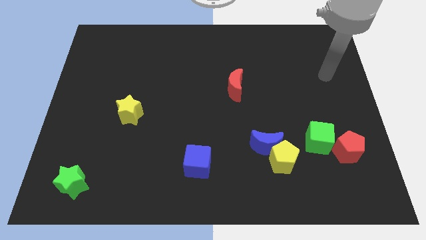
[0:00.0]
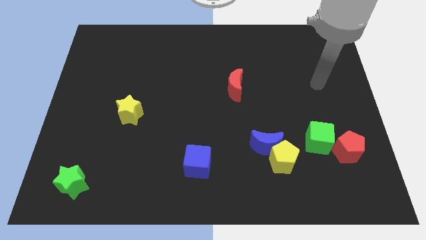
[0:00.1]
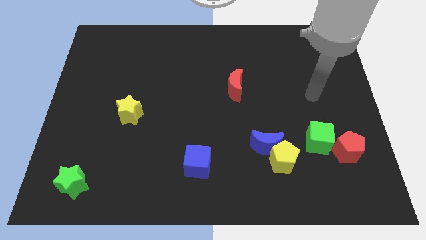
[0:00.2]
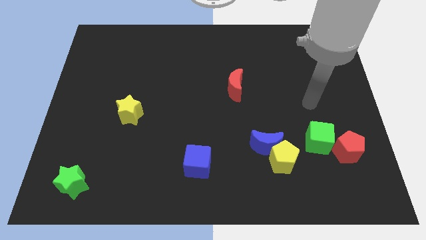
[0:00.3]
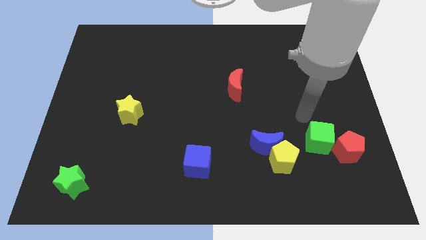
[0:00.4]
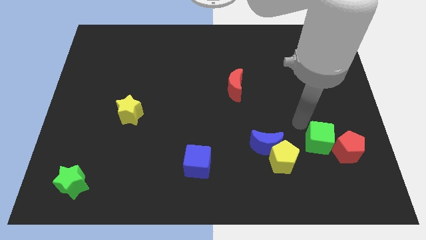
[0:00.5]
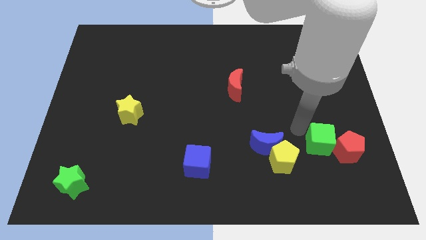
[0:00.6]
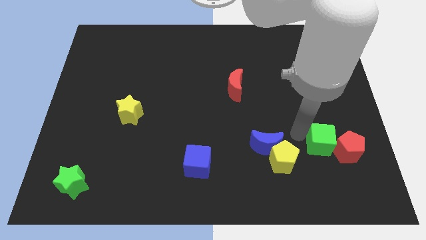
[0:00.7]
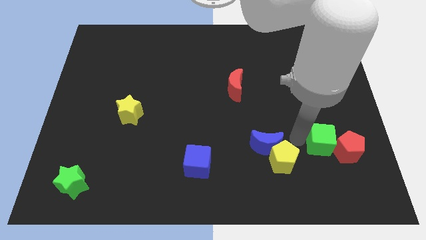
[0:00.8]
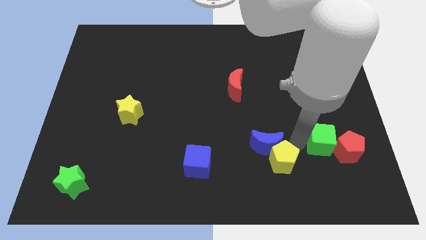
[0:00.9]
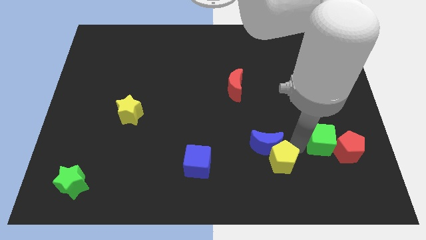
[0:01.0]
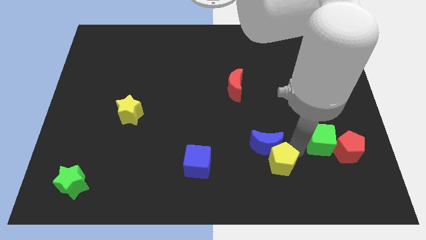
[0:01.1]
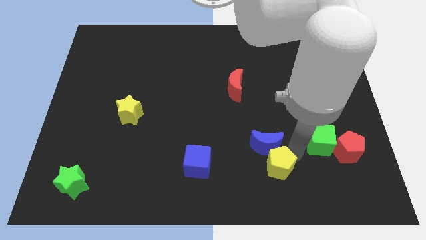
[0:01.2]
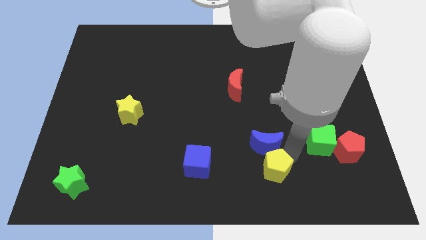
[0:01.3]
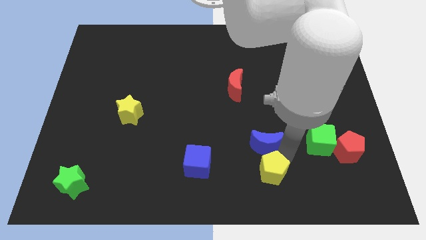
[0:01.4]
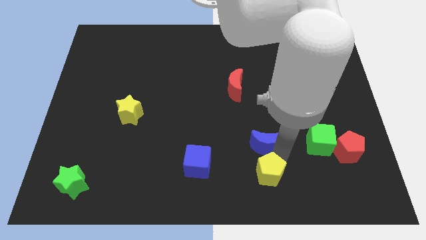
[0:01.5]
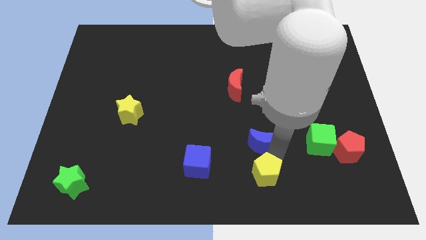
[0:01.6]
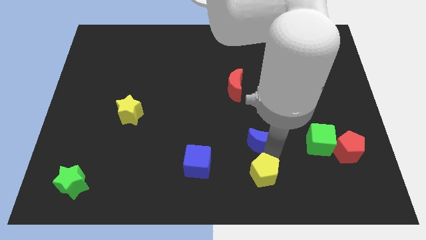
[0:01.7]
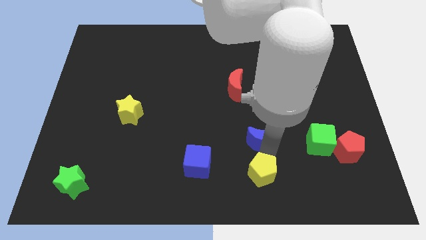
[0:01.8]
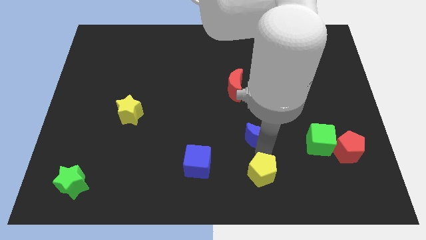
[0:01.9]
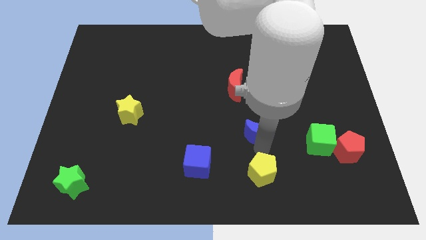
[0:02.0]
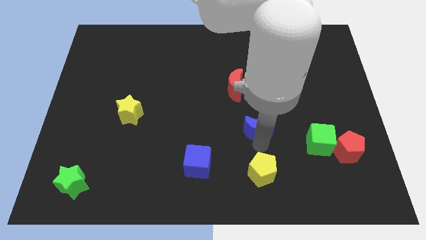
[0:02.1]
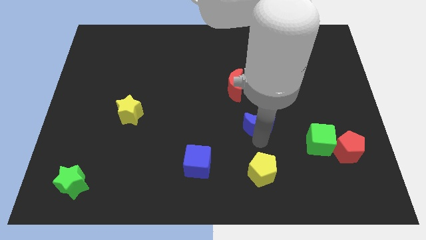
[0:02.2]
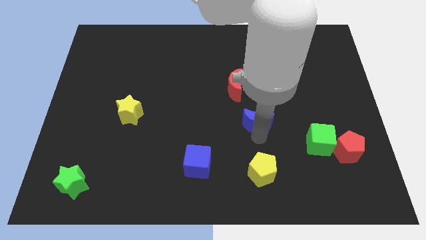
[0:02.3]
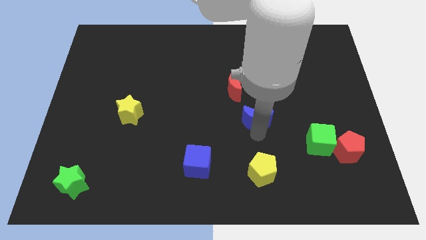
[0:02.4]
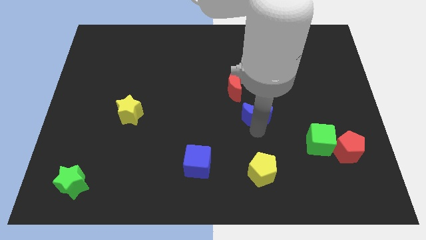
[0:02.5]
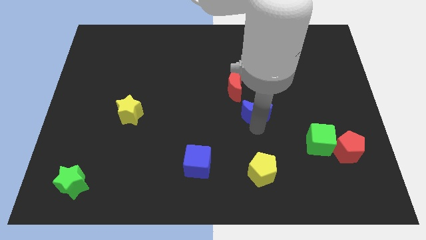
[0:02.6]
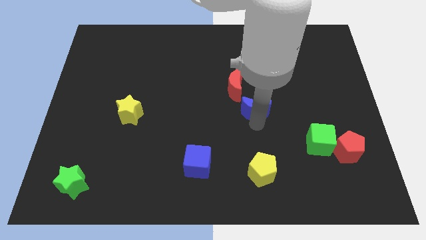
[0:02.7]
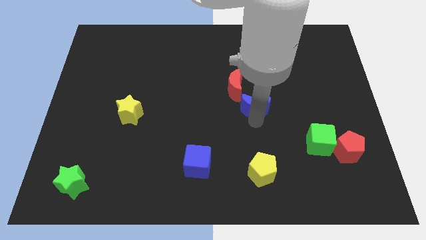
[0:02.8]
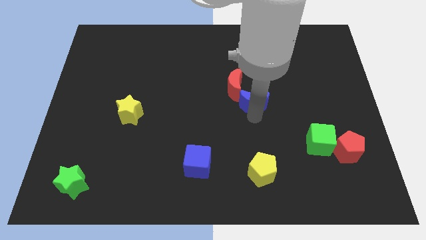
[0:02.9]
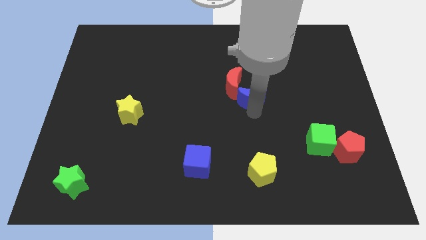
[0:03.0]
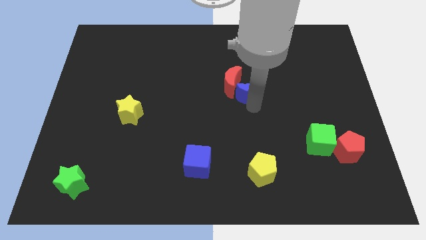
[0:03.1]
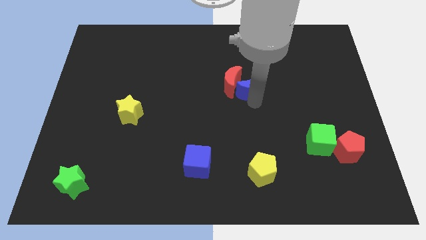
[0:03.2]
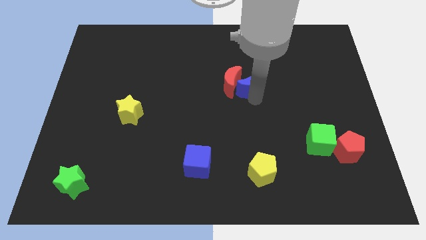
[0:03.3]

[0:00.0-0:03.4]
push the blue moon to the red moon

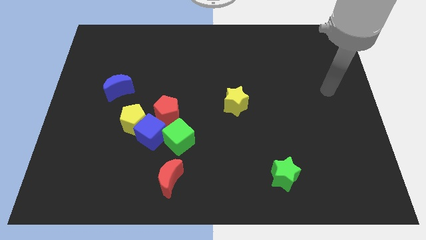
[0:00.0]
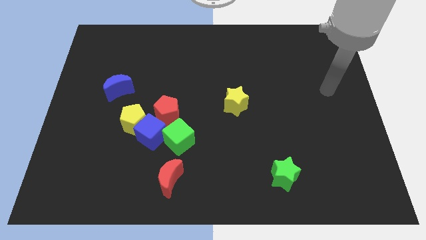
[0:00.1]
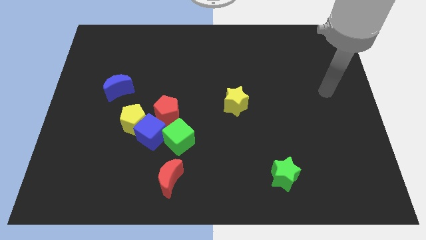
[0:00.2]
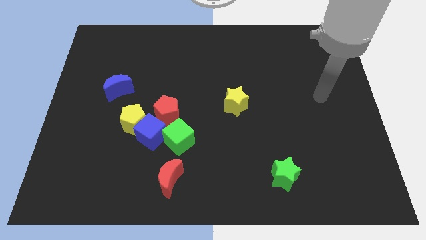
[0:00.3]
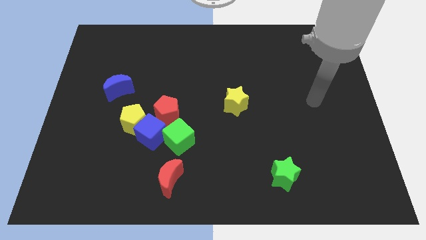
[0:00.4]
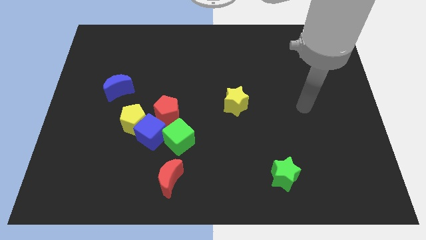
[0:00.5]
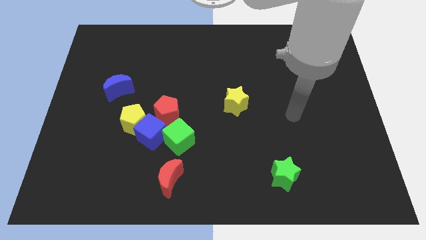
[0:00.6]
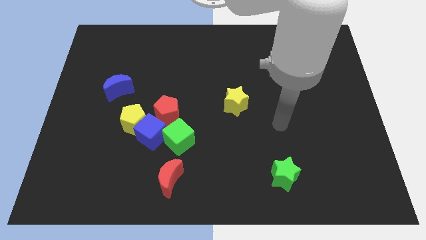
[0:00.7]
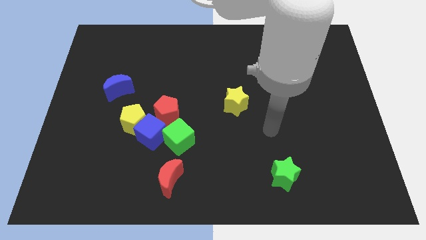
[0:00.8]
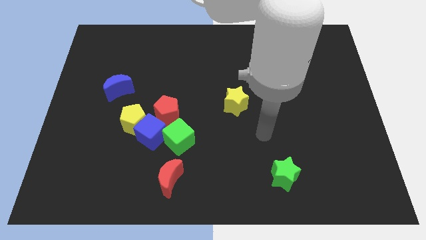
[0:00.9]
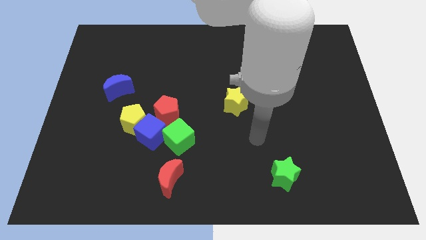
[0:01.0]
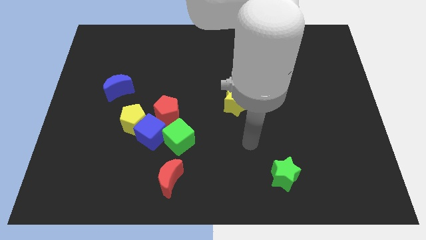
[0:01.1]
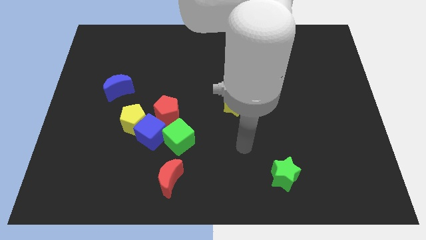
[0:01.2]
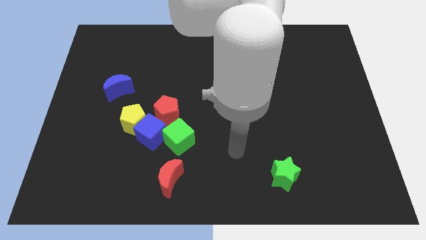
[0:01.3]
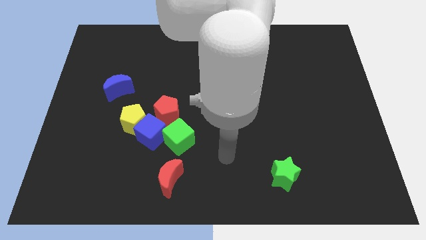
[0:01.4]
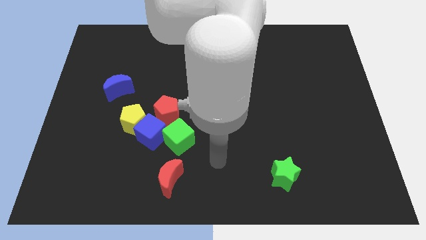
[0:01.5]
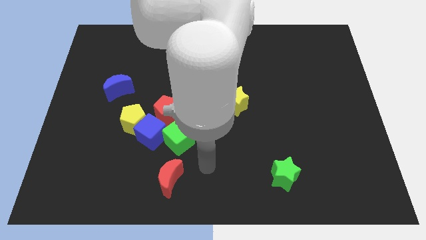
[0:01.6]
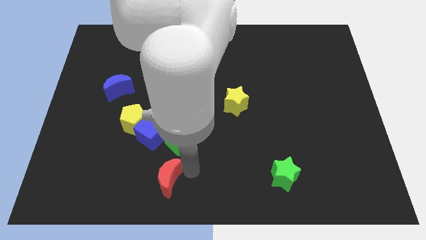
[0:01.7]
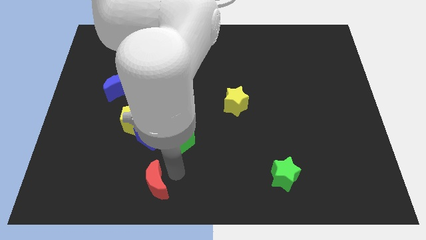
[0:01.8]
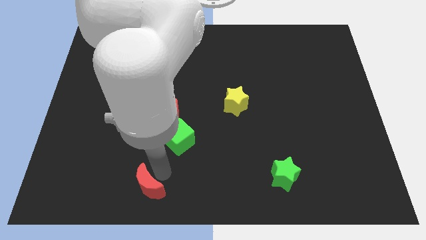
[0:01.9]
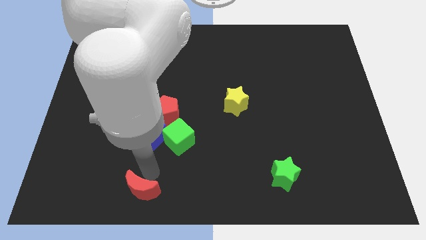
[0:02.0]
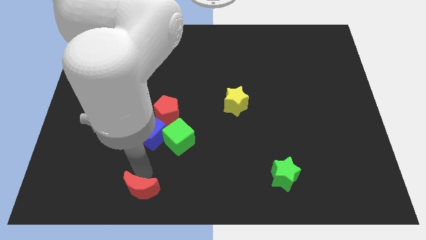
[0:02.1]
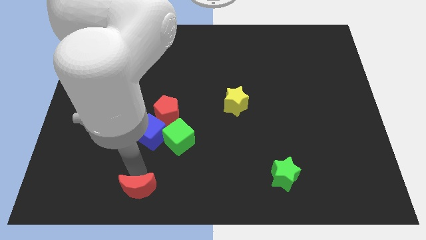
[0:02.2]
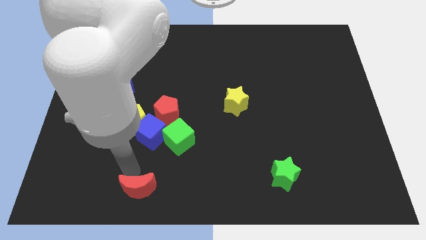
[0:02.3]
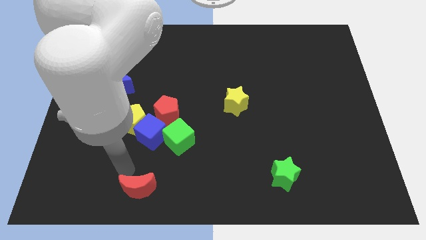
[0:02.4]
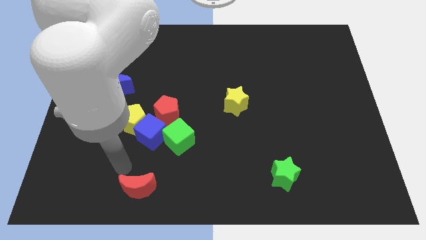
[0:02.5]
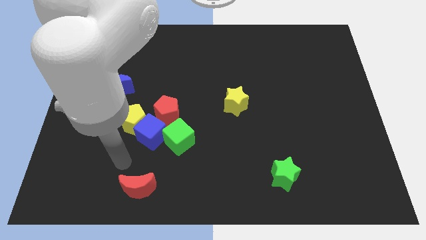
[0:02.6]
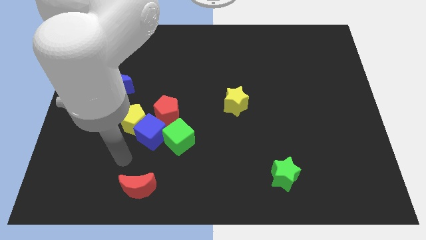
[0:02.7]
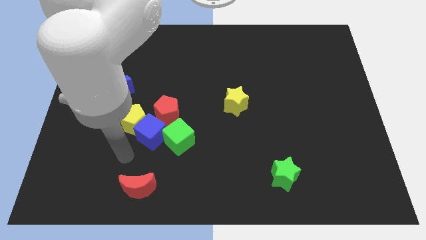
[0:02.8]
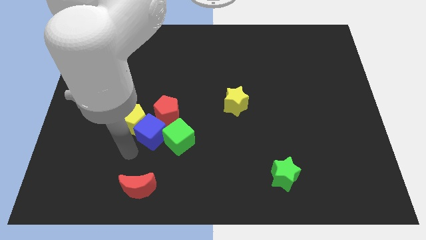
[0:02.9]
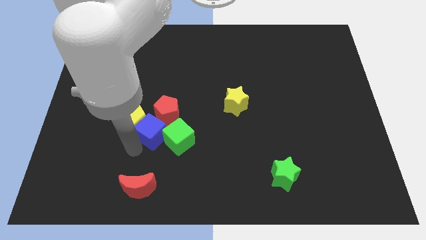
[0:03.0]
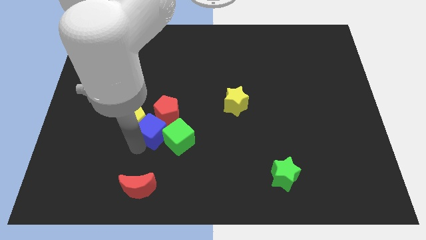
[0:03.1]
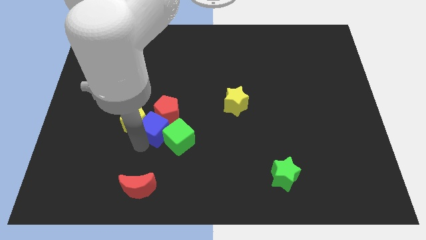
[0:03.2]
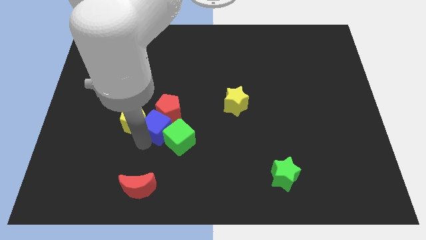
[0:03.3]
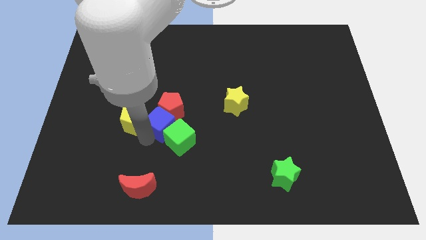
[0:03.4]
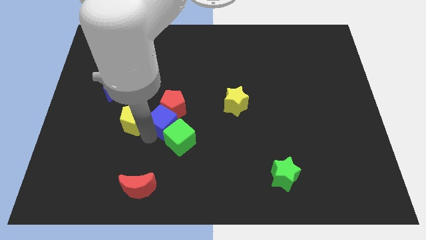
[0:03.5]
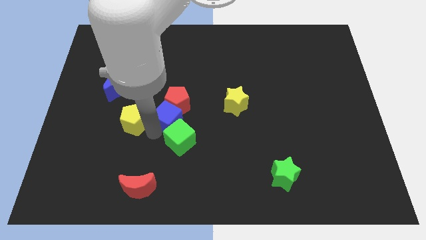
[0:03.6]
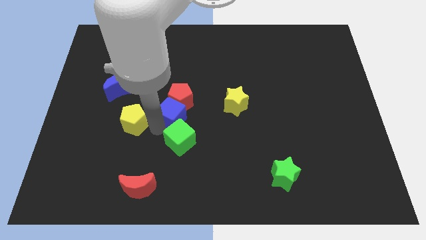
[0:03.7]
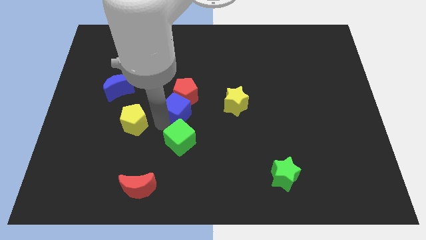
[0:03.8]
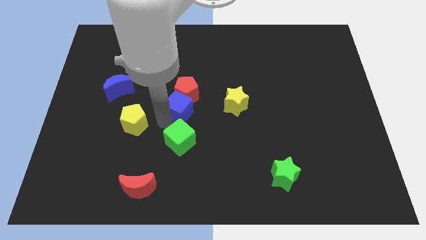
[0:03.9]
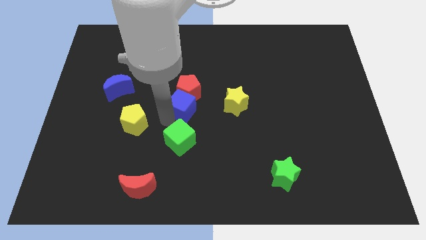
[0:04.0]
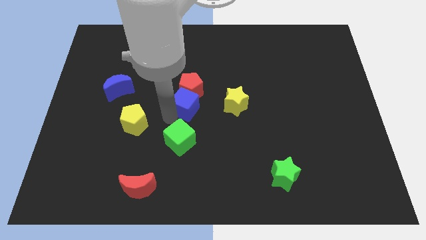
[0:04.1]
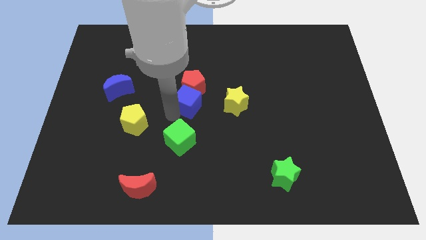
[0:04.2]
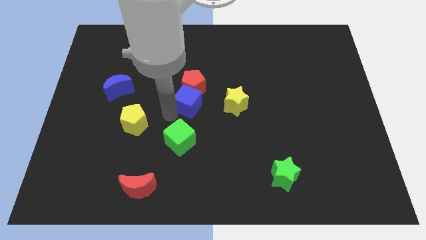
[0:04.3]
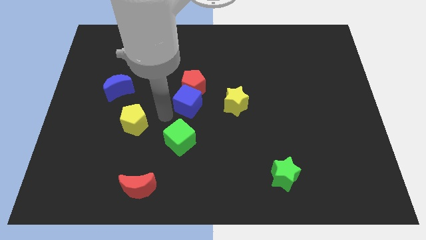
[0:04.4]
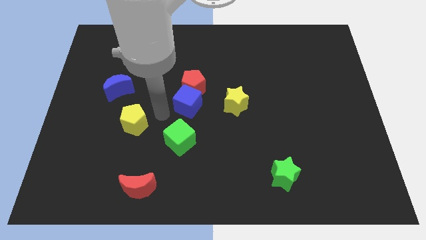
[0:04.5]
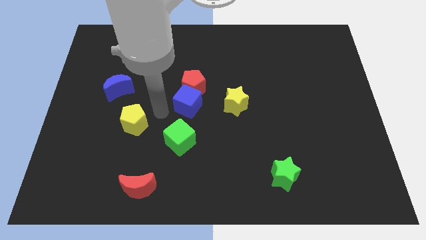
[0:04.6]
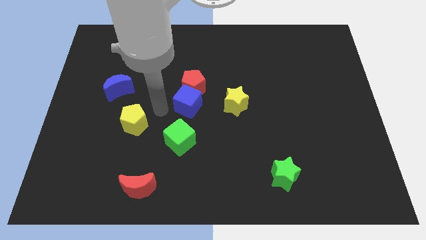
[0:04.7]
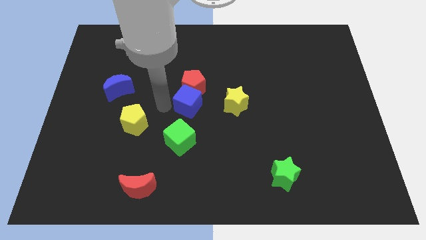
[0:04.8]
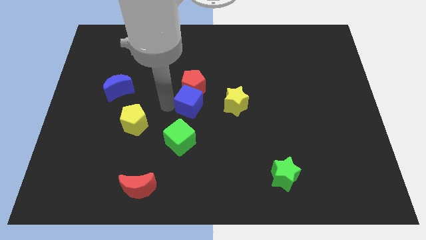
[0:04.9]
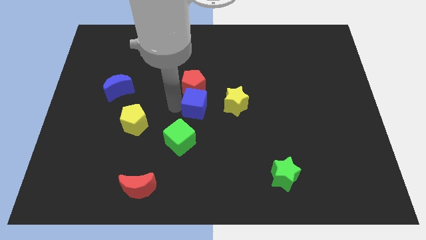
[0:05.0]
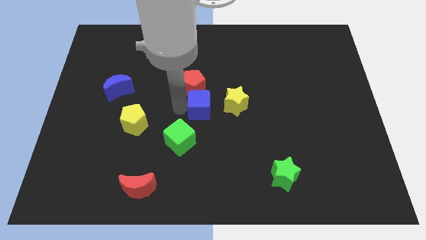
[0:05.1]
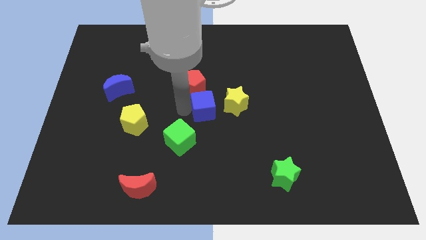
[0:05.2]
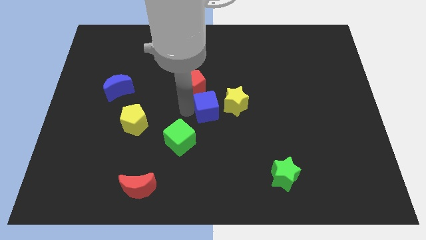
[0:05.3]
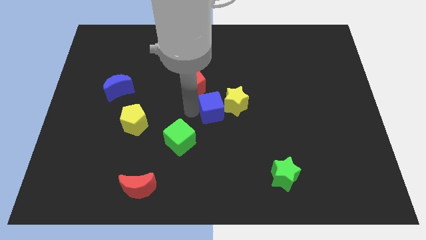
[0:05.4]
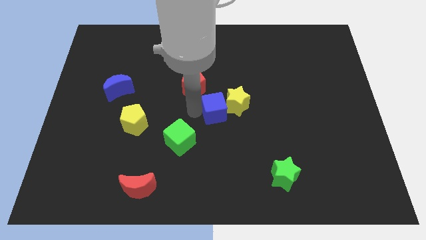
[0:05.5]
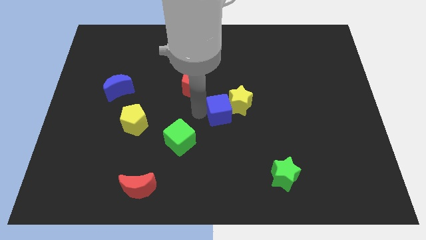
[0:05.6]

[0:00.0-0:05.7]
put the blue cube next to the yellow star
